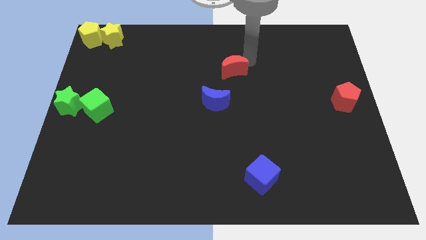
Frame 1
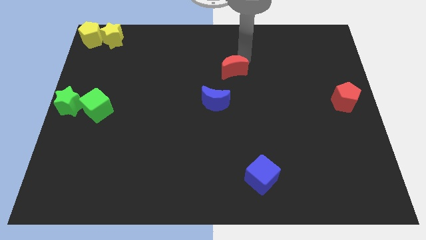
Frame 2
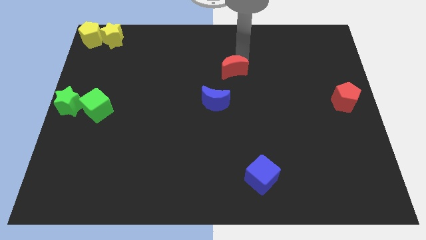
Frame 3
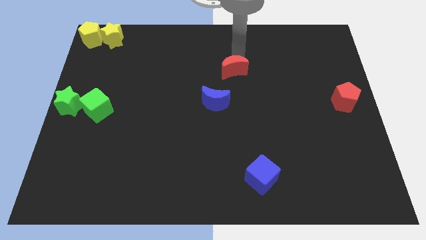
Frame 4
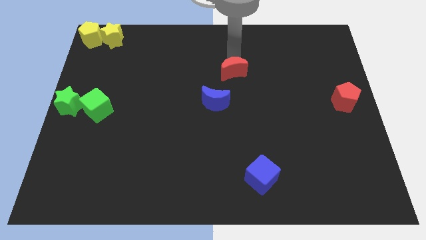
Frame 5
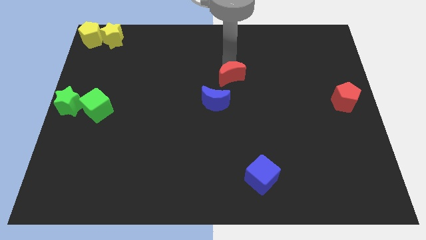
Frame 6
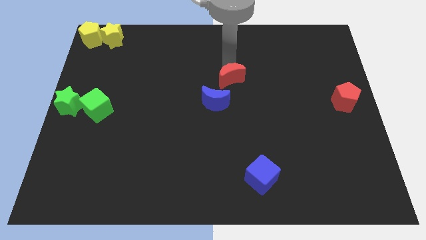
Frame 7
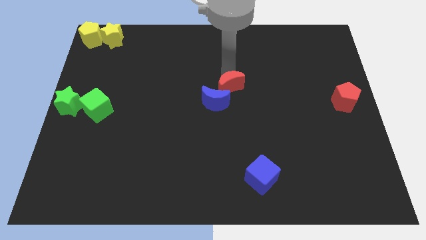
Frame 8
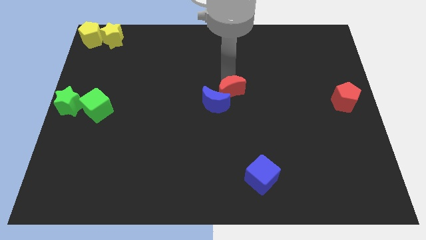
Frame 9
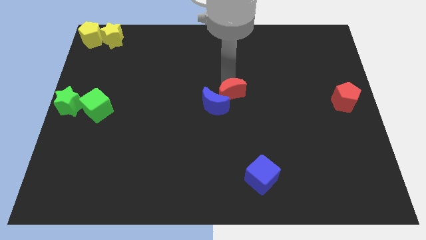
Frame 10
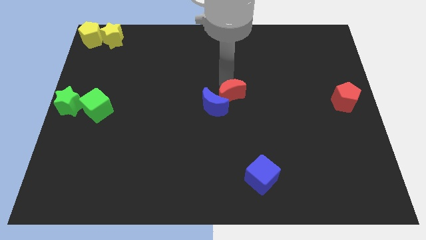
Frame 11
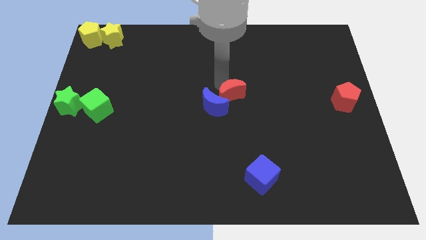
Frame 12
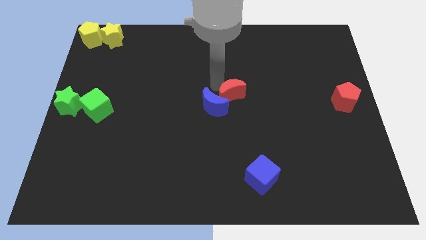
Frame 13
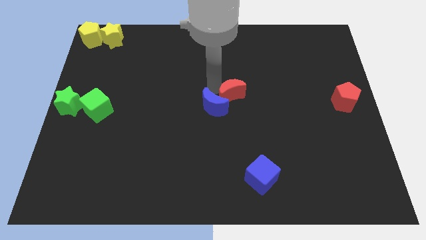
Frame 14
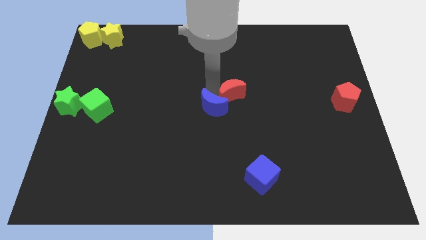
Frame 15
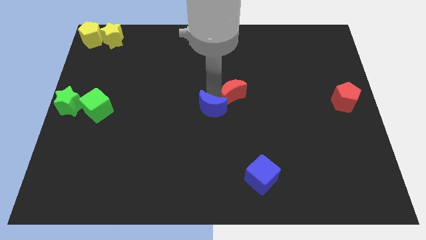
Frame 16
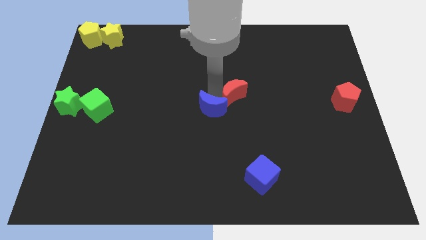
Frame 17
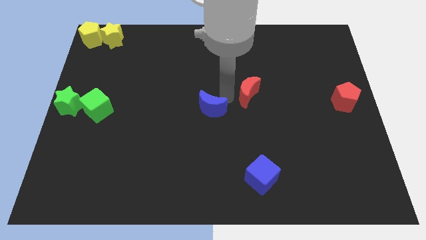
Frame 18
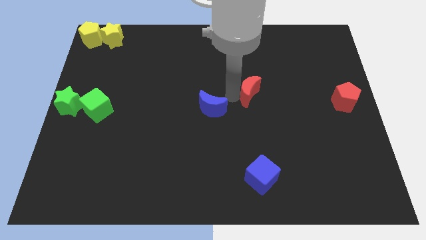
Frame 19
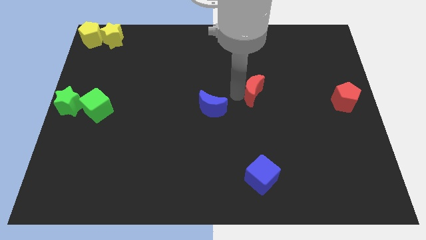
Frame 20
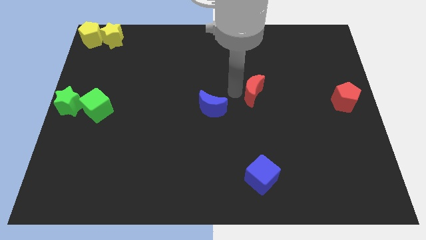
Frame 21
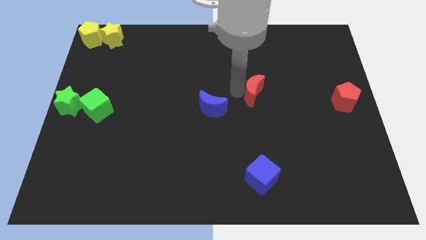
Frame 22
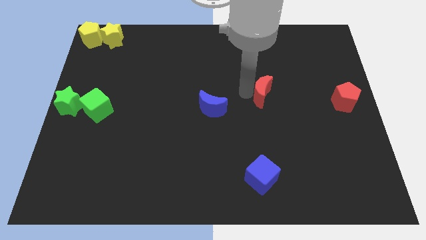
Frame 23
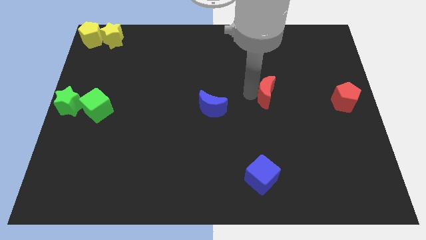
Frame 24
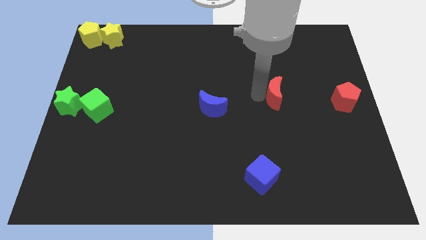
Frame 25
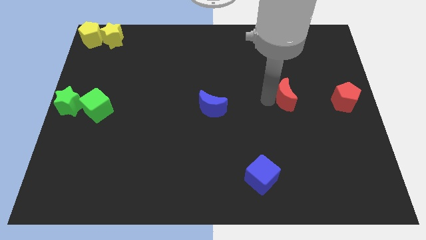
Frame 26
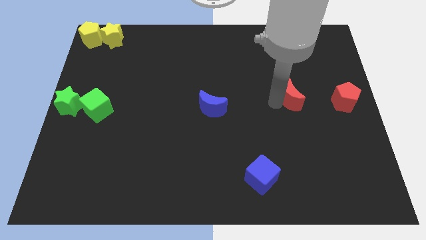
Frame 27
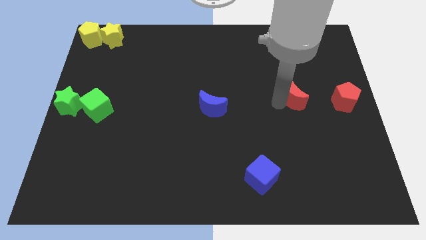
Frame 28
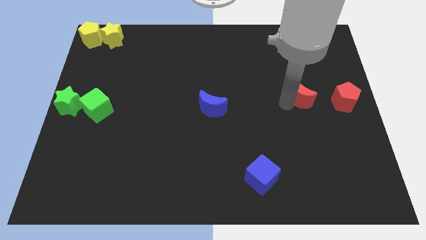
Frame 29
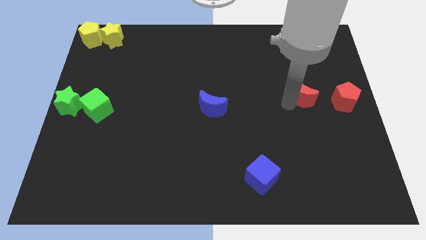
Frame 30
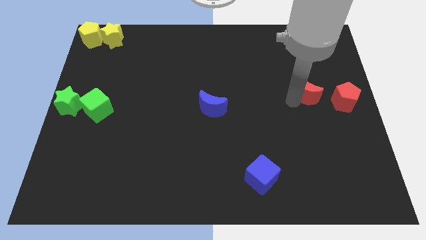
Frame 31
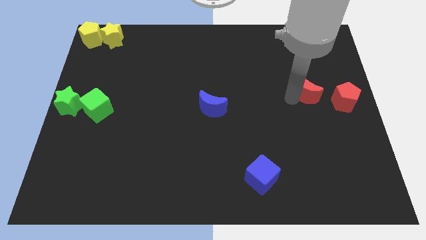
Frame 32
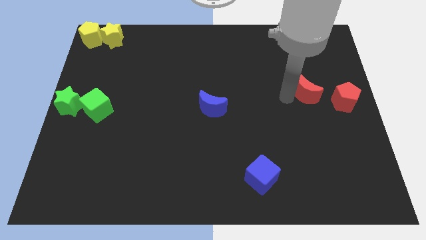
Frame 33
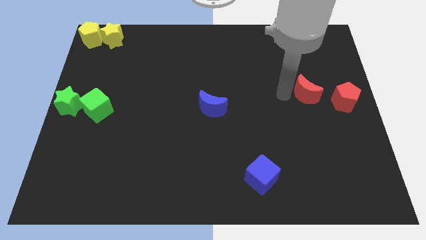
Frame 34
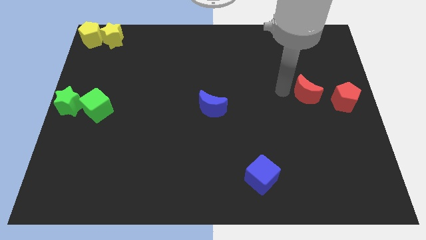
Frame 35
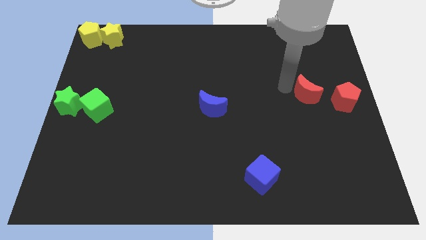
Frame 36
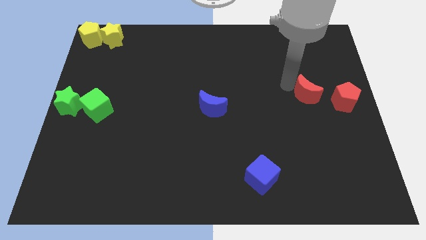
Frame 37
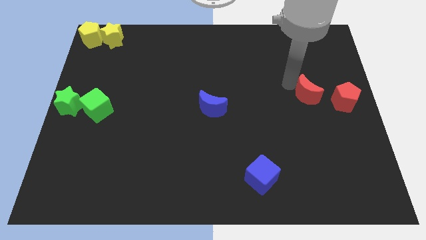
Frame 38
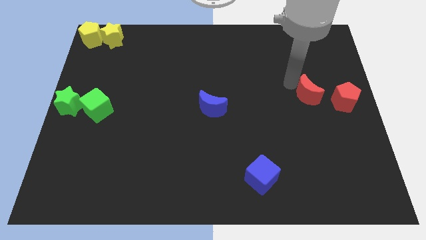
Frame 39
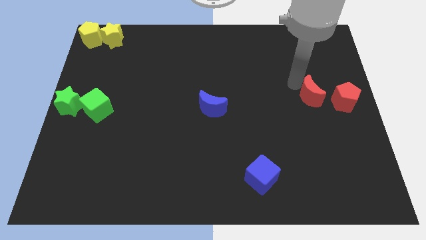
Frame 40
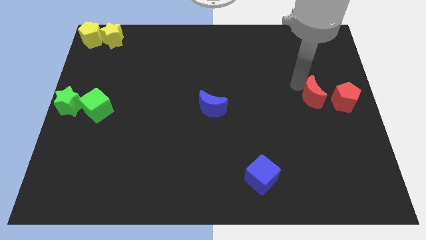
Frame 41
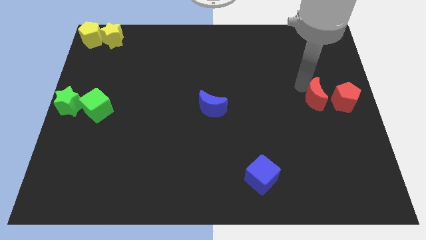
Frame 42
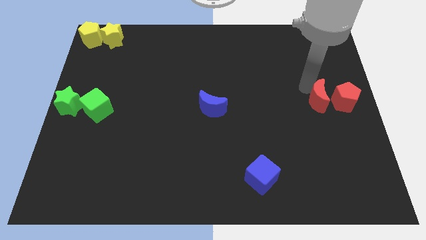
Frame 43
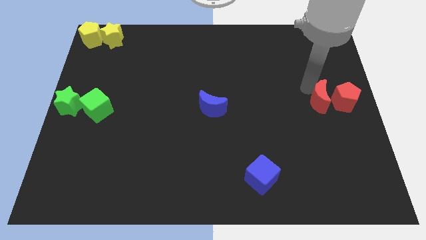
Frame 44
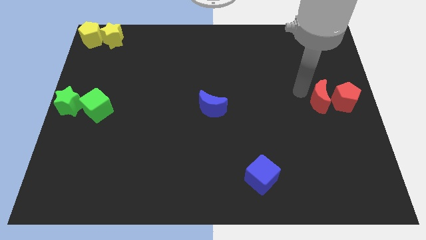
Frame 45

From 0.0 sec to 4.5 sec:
push the red moon to the left side of the red pentagon

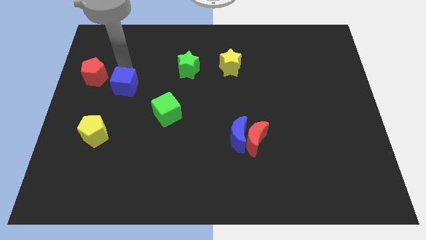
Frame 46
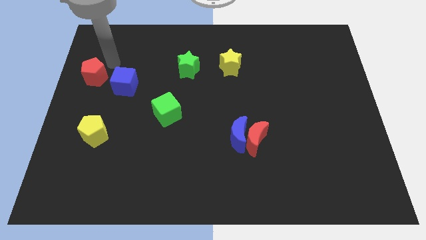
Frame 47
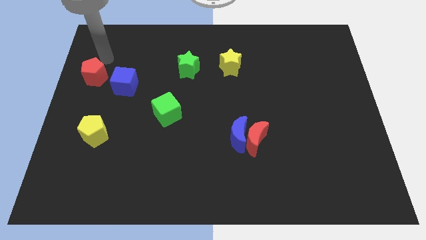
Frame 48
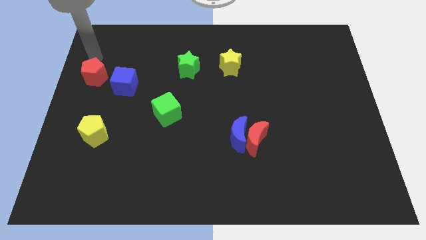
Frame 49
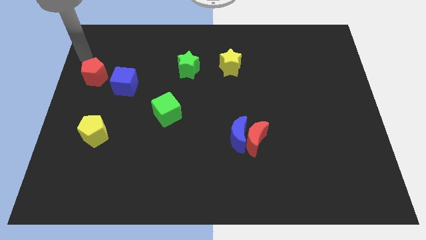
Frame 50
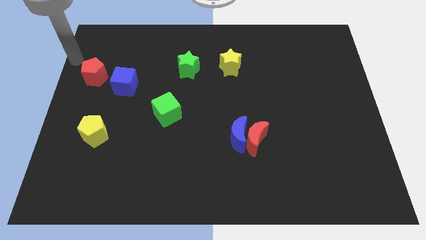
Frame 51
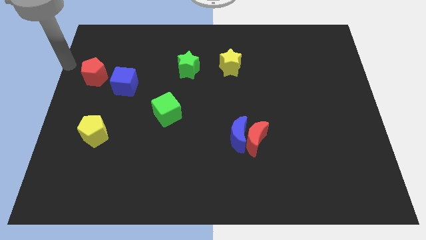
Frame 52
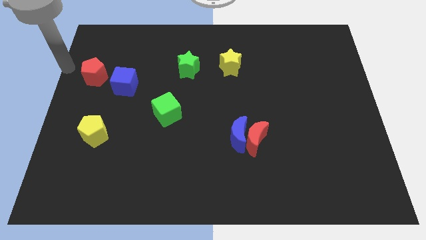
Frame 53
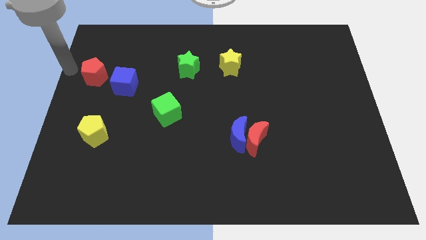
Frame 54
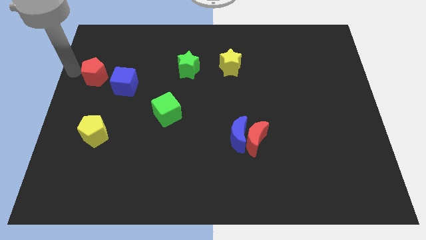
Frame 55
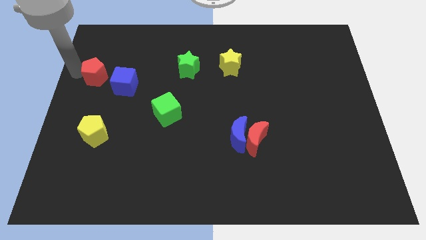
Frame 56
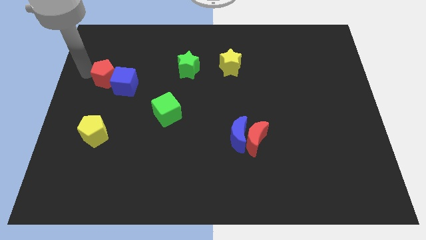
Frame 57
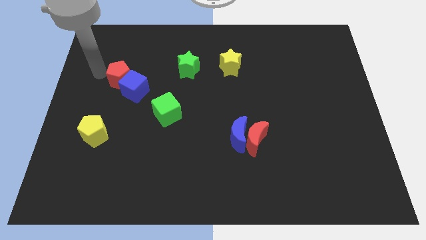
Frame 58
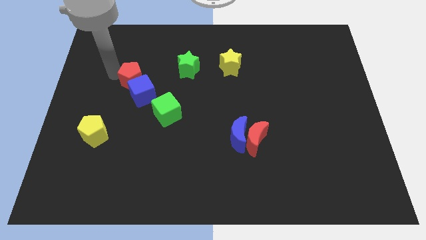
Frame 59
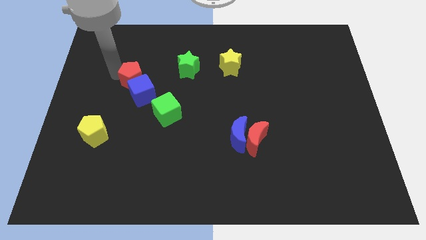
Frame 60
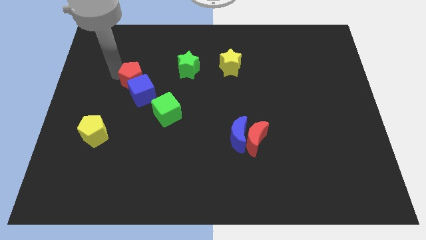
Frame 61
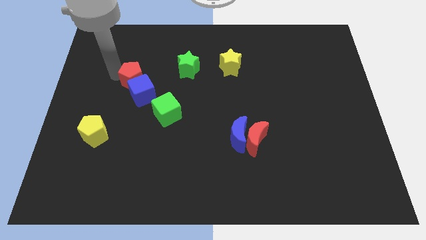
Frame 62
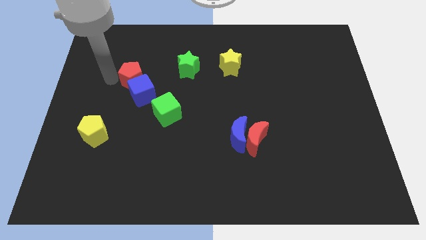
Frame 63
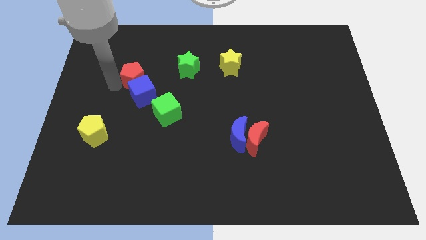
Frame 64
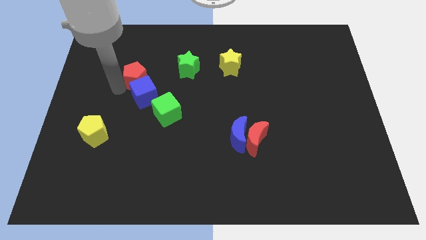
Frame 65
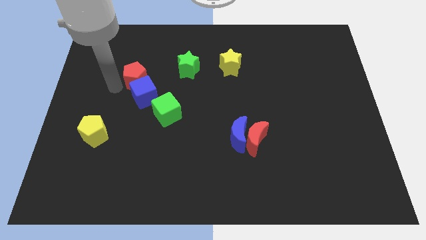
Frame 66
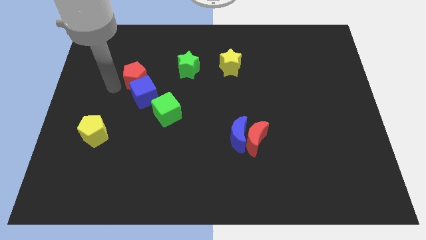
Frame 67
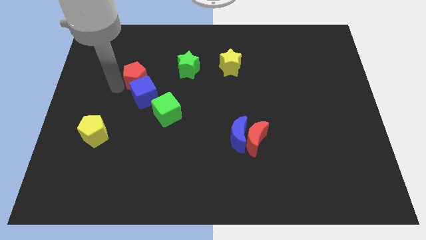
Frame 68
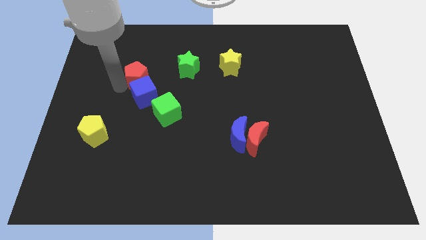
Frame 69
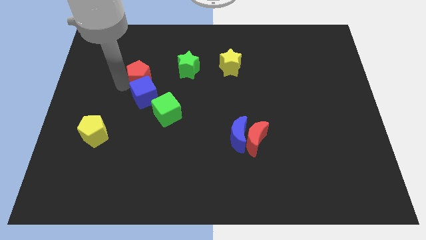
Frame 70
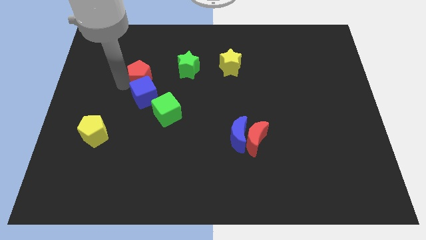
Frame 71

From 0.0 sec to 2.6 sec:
move the red pentagon diagonally above blue cube

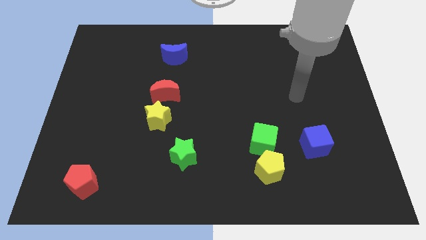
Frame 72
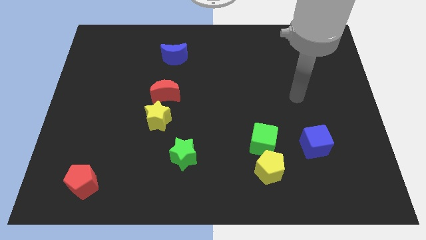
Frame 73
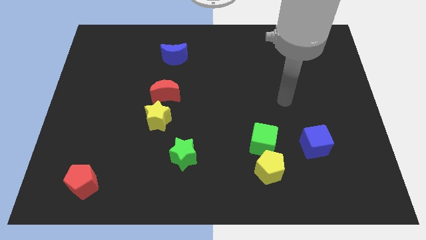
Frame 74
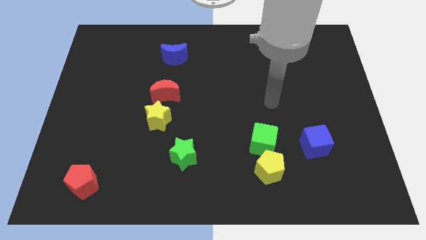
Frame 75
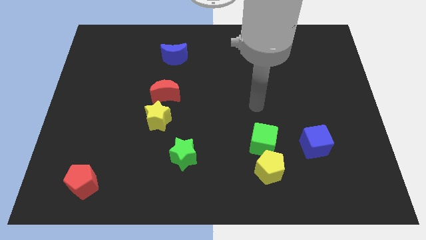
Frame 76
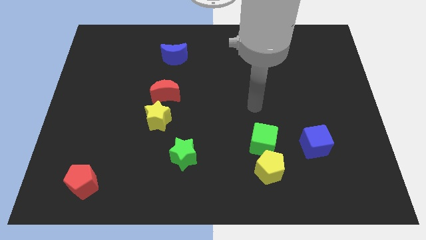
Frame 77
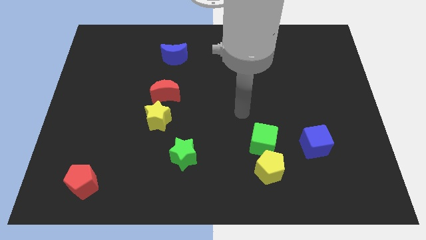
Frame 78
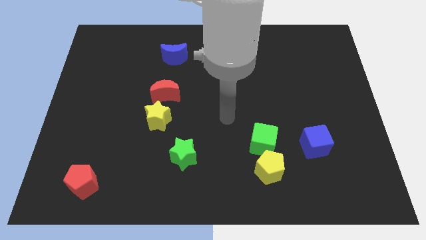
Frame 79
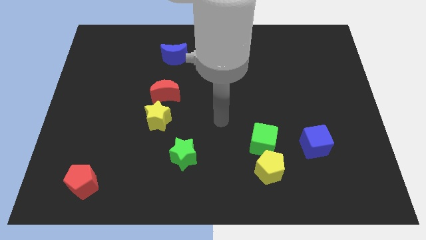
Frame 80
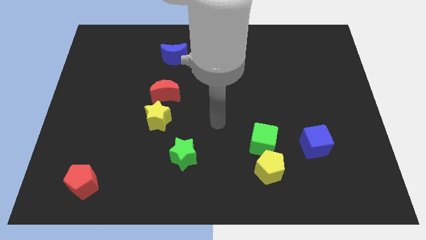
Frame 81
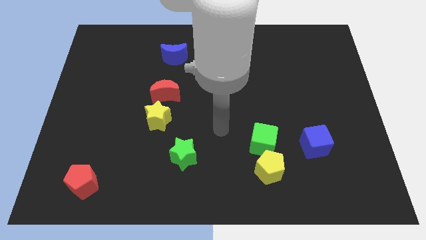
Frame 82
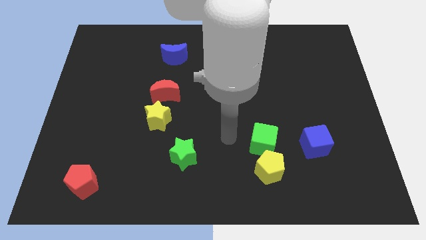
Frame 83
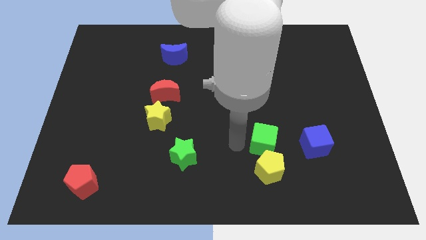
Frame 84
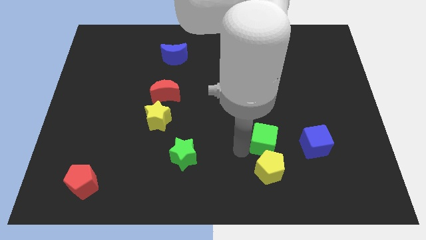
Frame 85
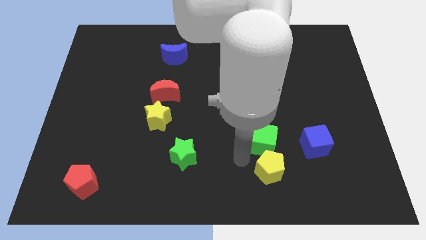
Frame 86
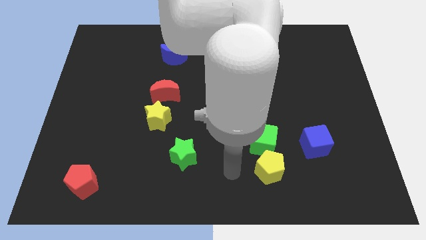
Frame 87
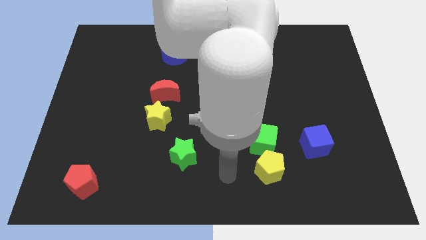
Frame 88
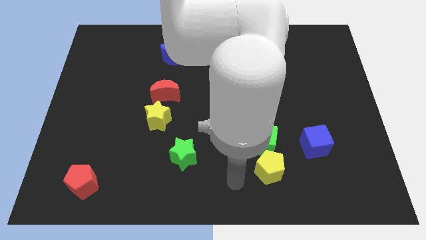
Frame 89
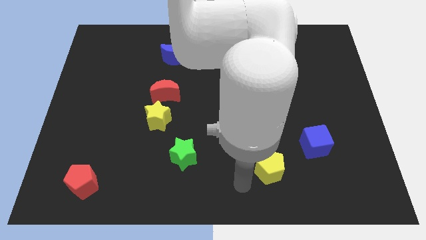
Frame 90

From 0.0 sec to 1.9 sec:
move the arm to the yellow penatgon
